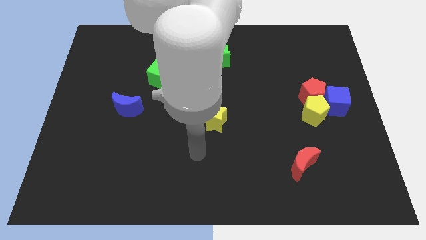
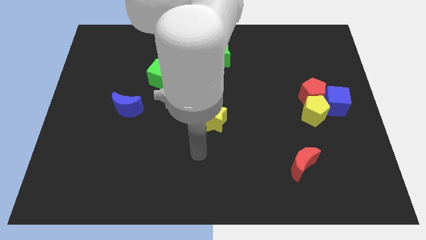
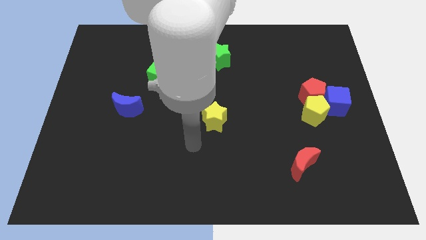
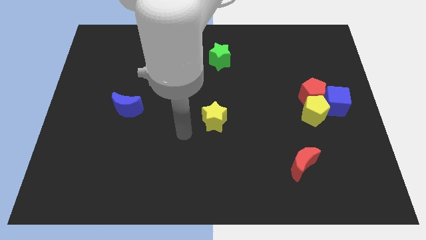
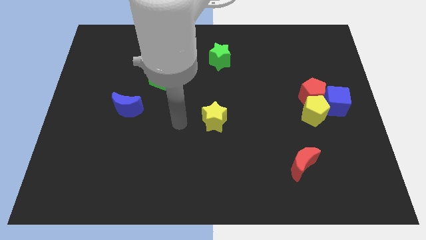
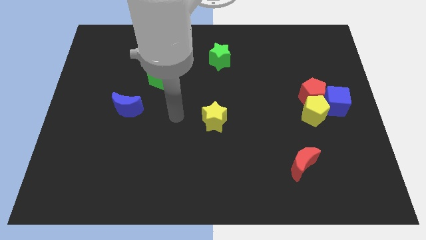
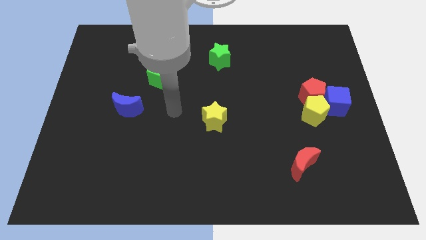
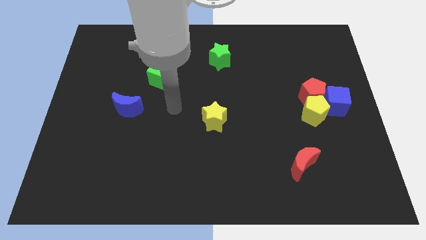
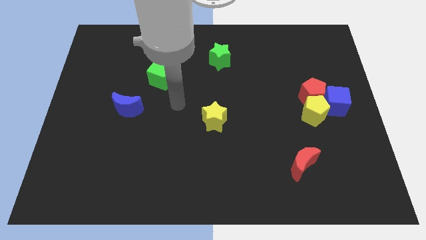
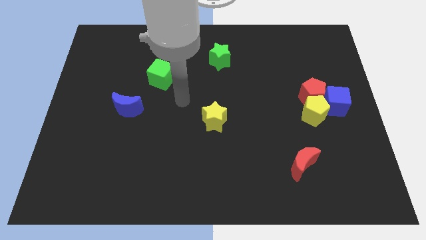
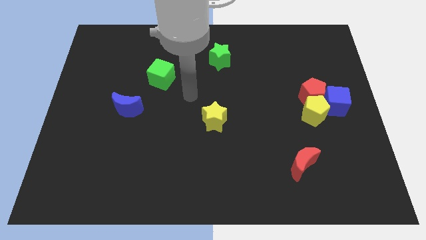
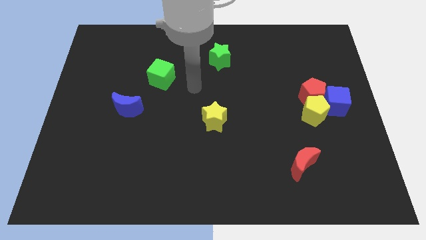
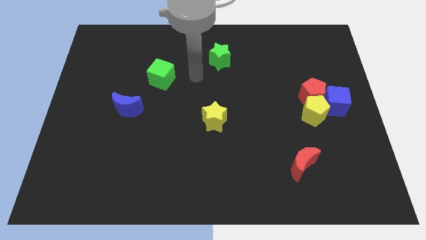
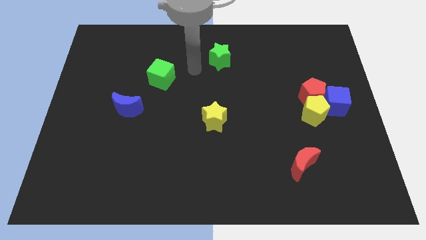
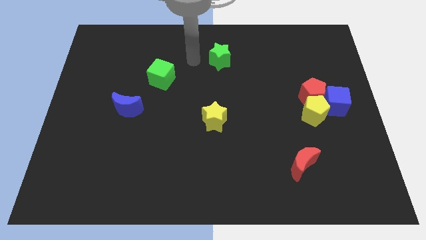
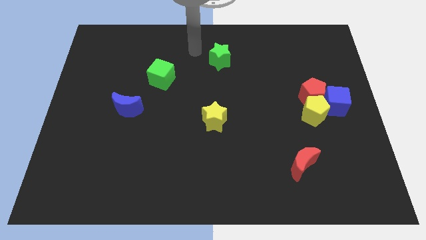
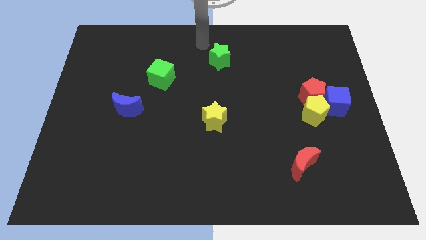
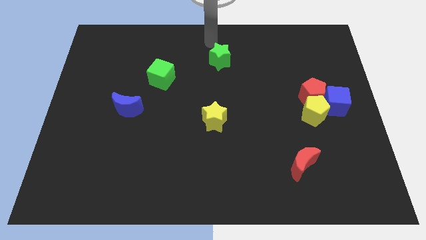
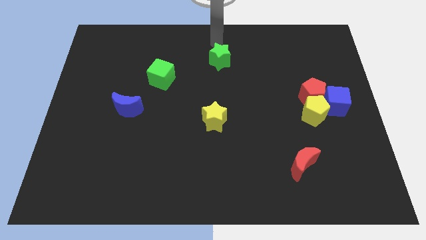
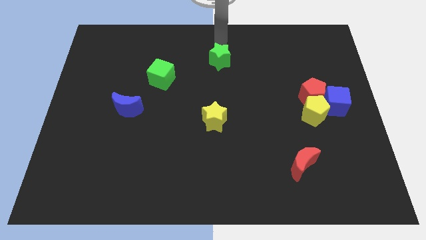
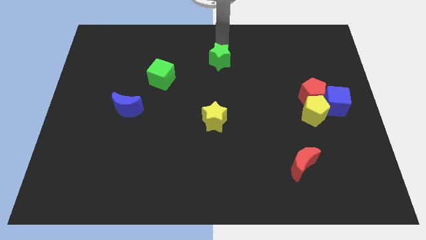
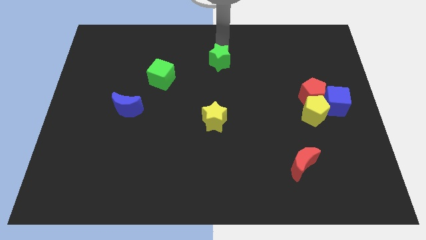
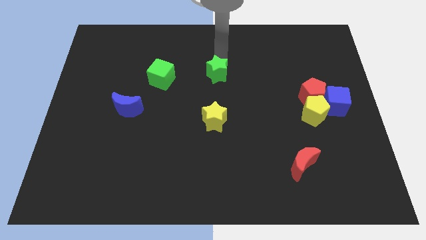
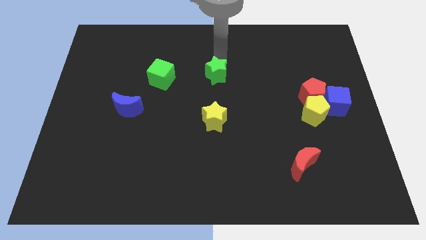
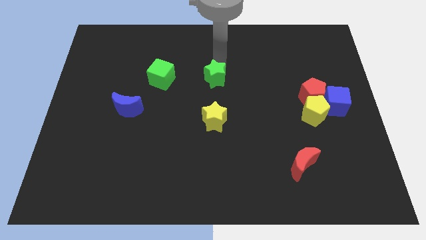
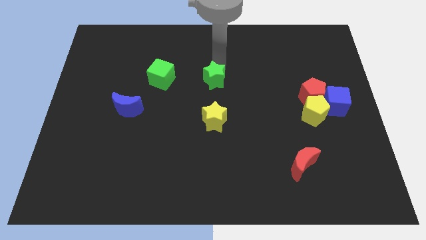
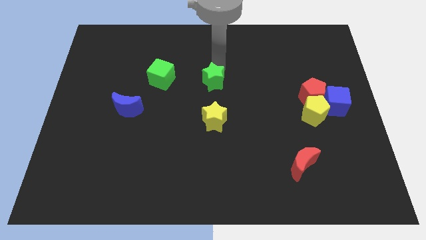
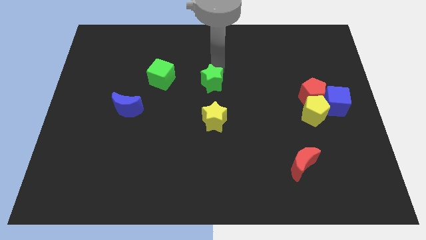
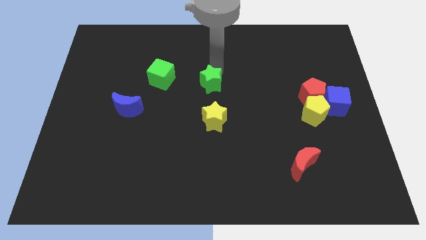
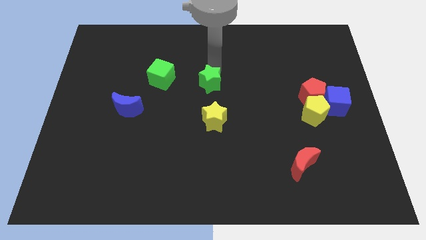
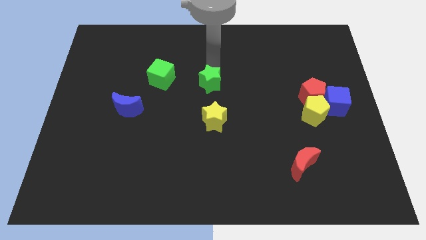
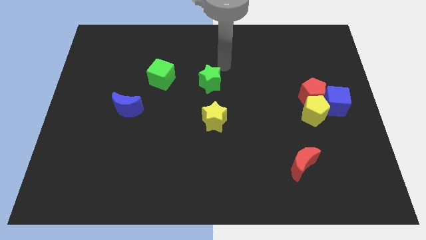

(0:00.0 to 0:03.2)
push green star towards yellow star

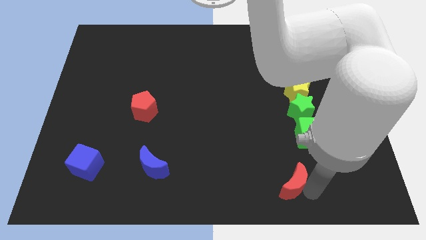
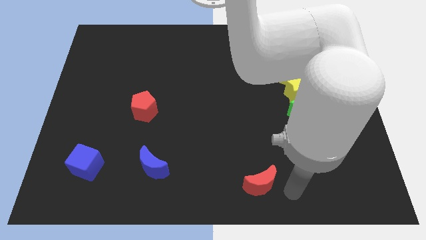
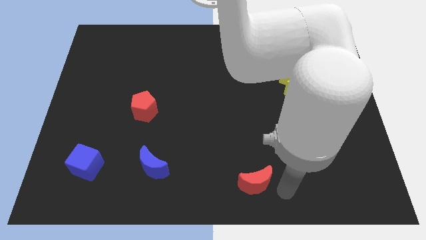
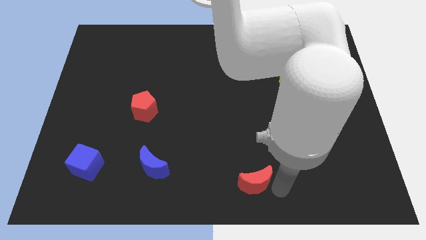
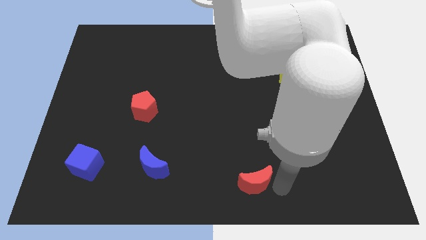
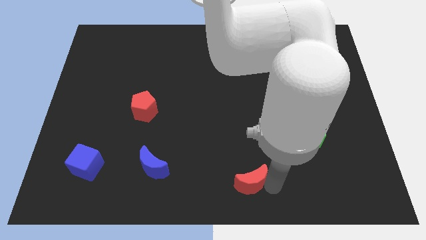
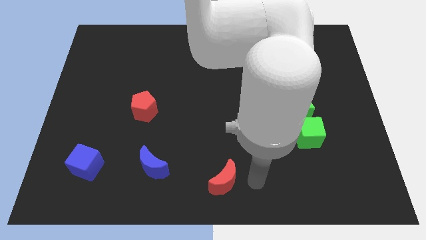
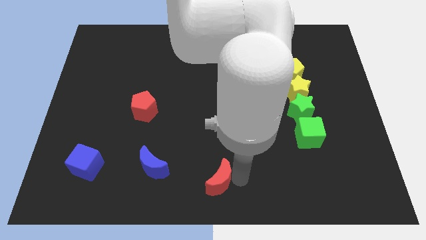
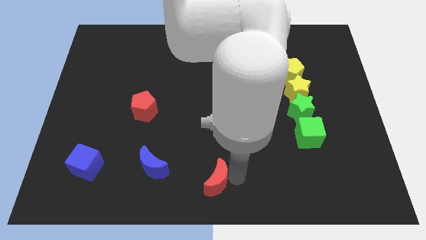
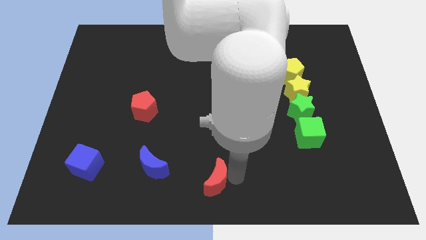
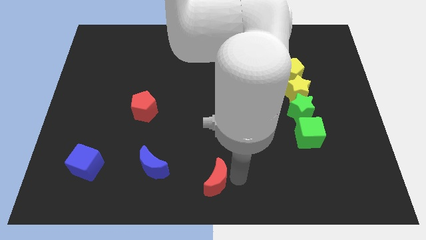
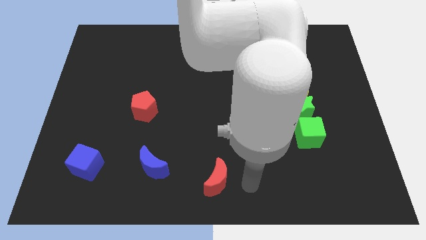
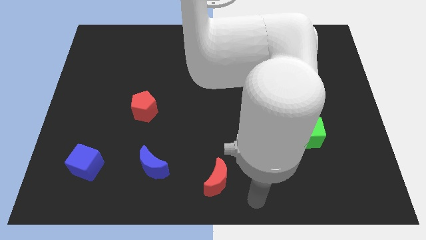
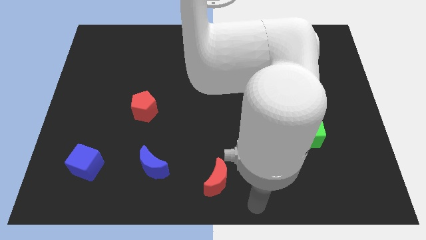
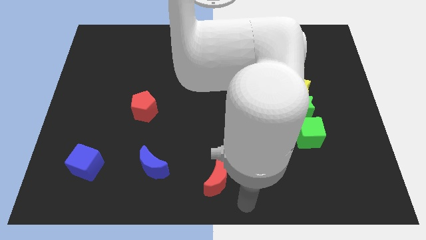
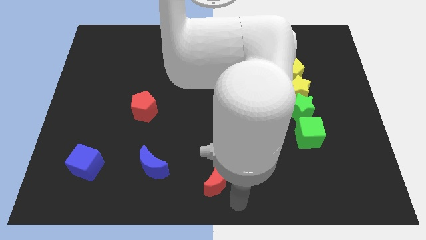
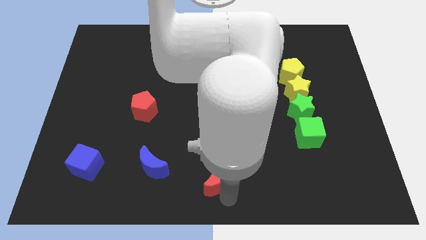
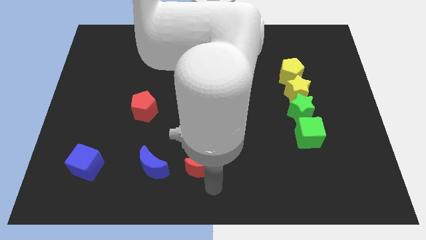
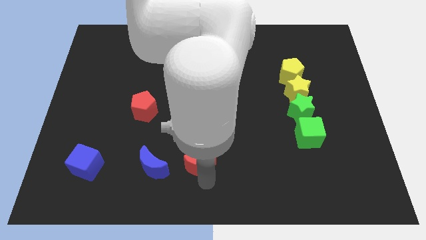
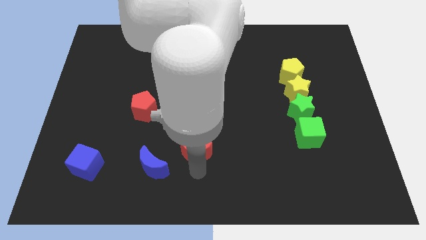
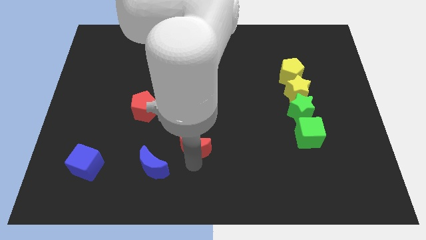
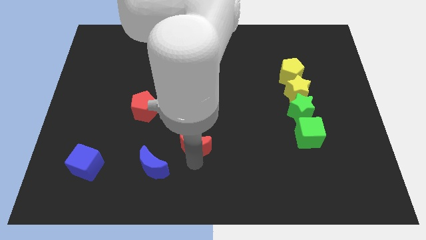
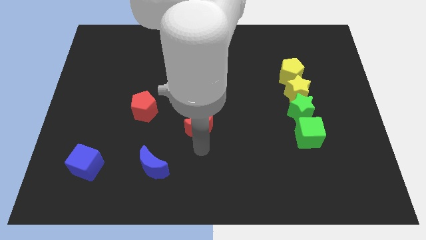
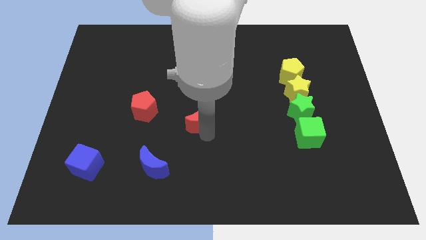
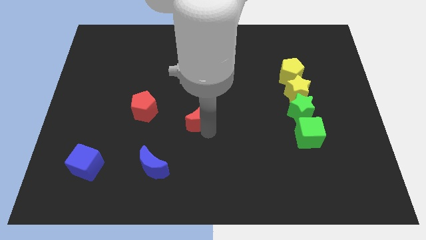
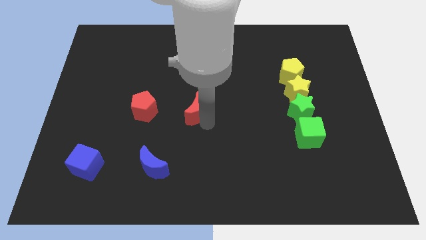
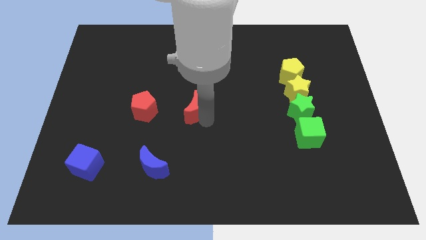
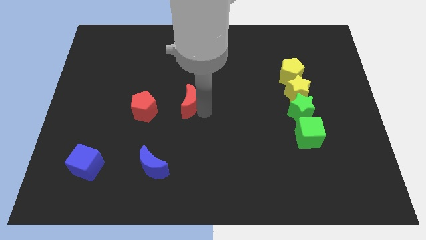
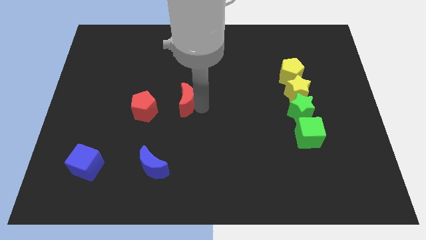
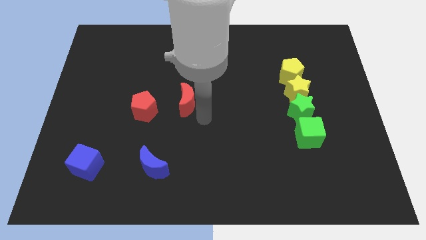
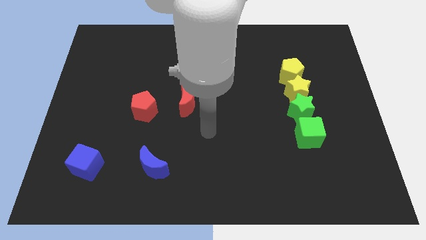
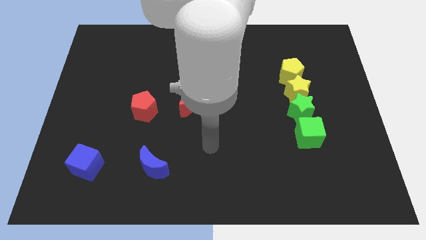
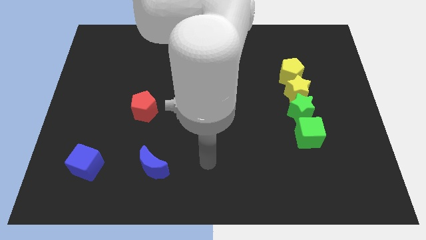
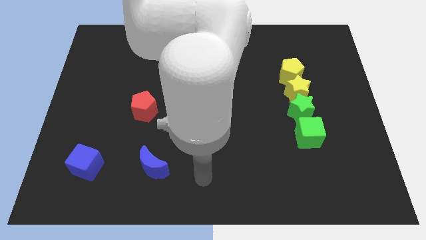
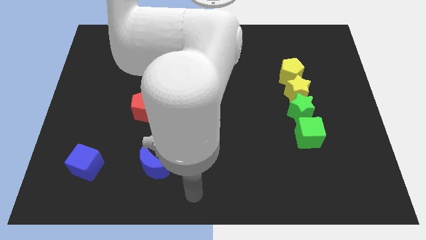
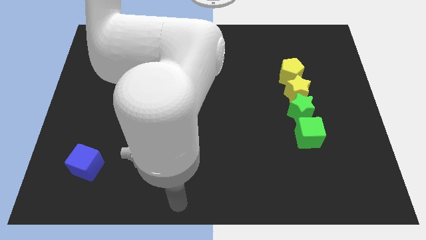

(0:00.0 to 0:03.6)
push the red crescent towards the right side of the red pentagon

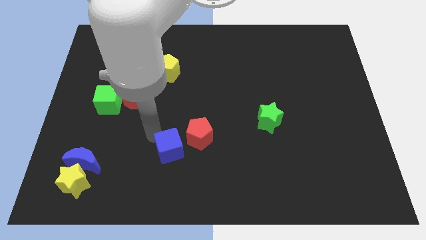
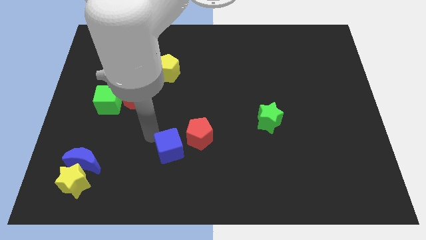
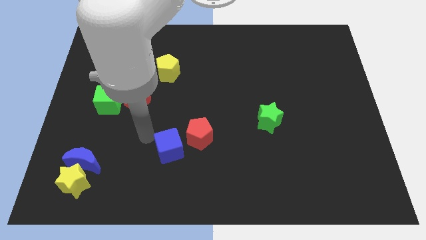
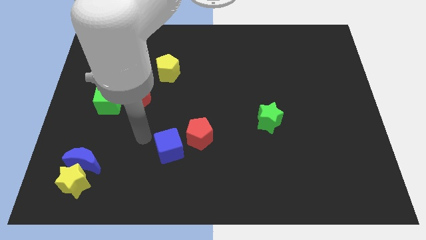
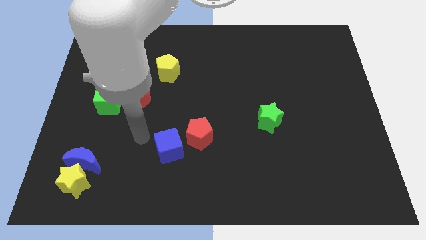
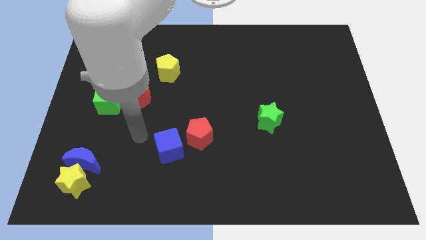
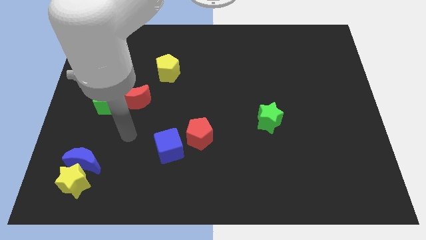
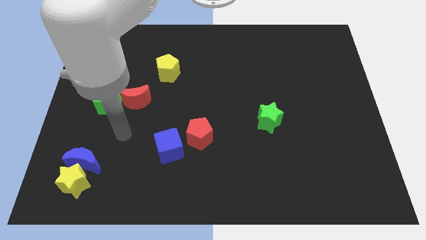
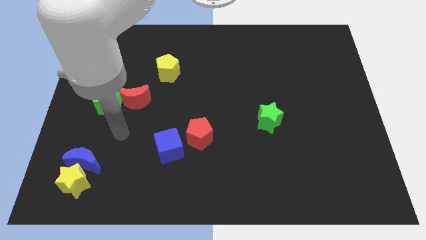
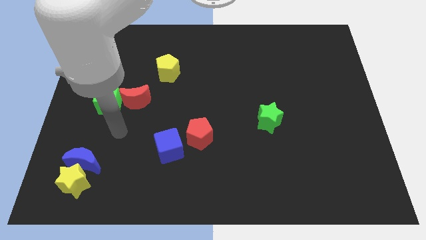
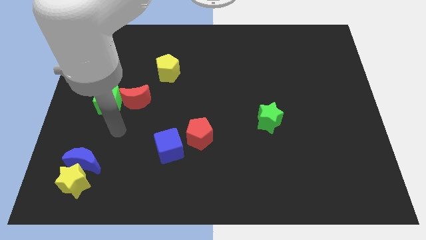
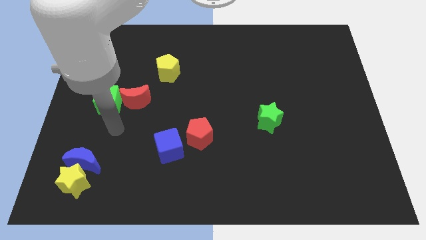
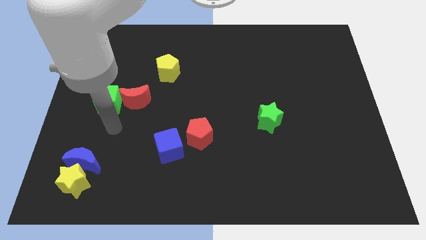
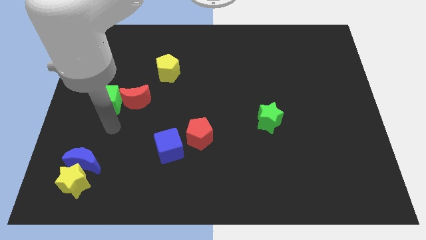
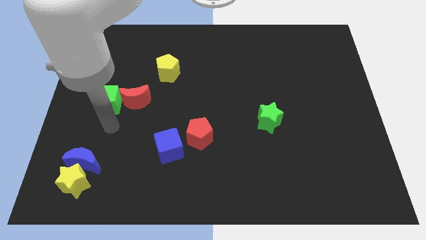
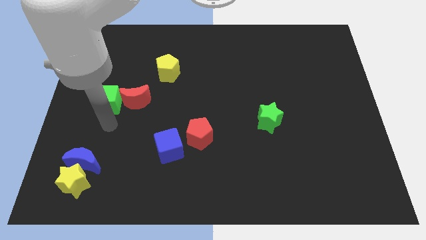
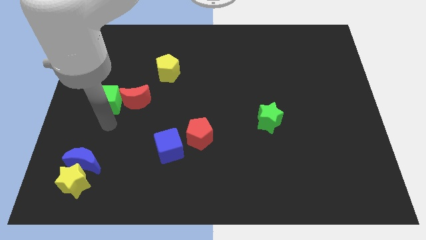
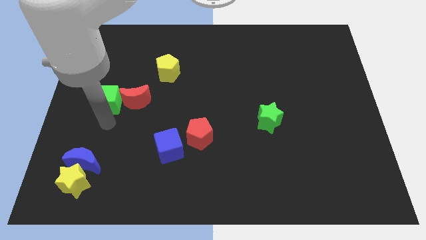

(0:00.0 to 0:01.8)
place the arm below the green cube

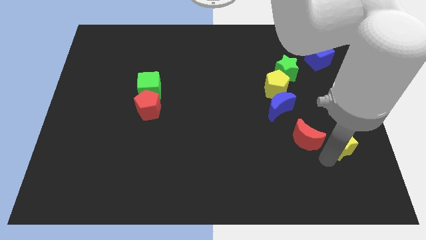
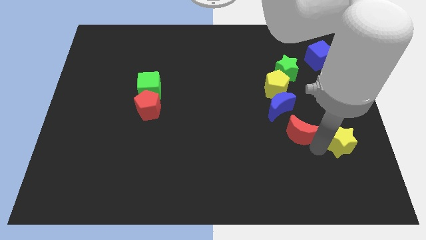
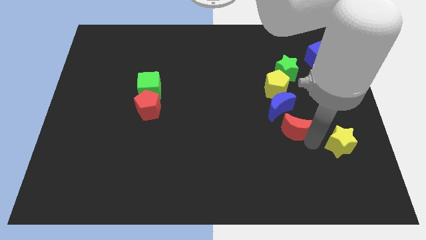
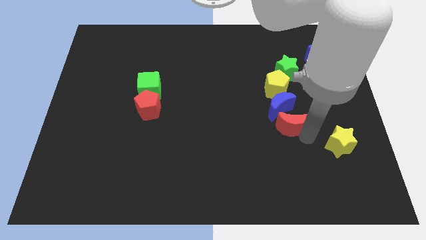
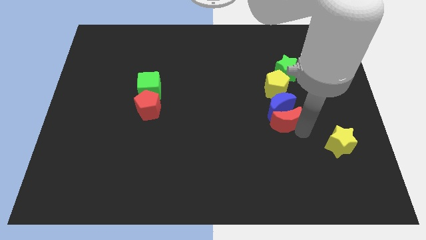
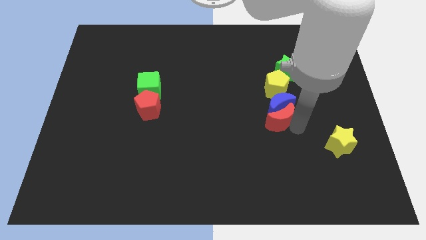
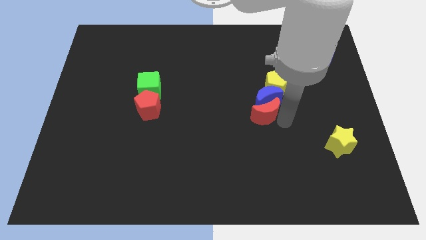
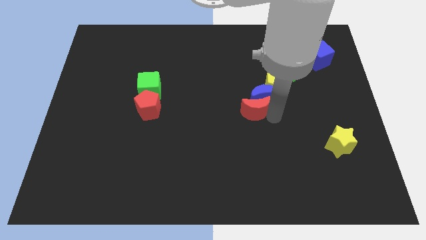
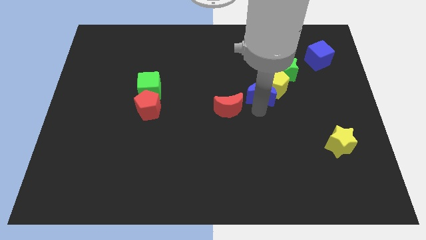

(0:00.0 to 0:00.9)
move the red moon into blue moon
